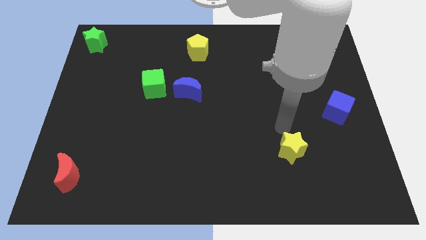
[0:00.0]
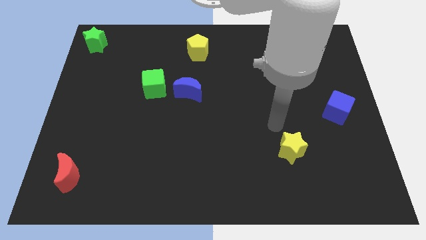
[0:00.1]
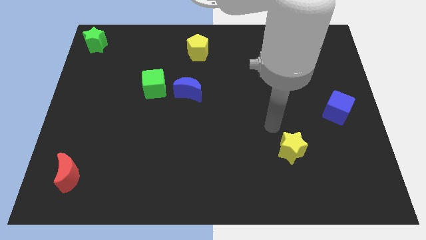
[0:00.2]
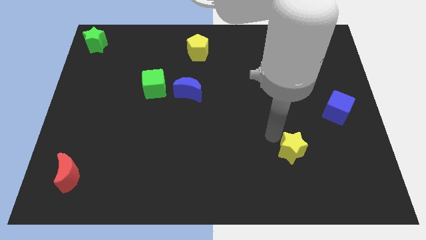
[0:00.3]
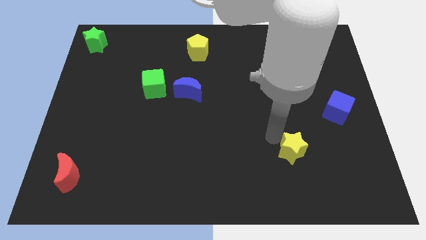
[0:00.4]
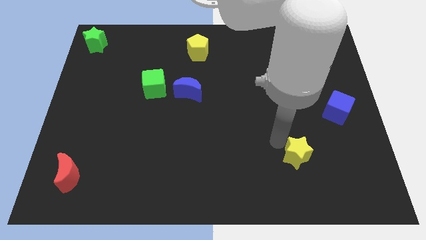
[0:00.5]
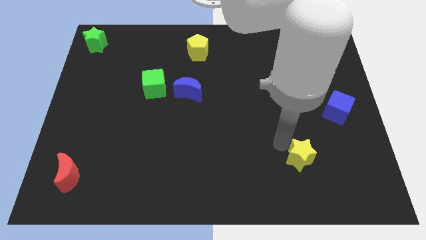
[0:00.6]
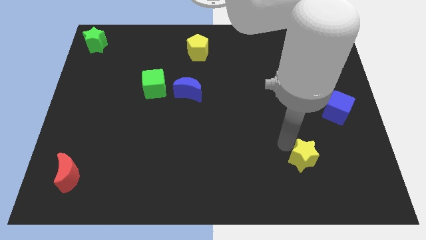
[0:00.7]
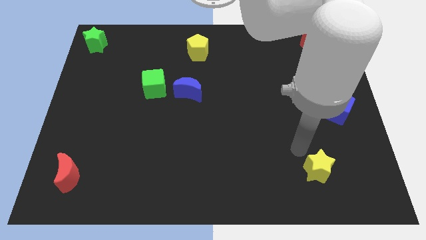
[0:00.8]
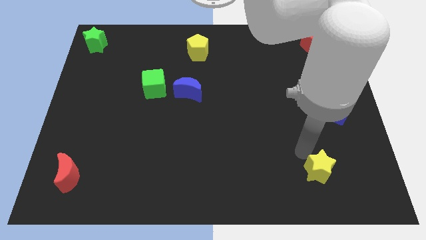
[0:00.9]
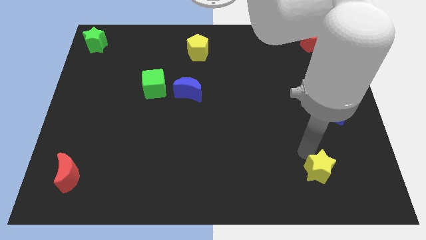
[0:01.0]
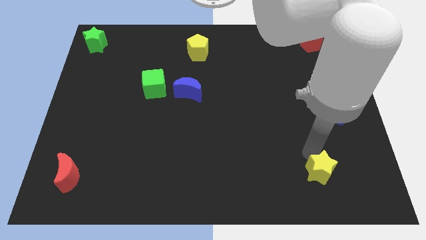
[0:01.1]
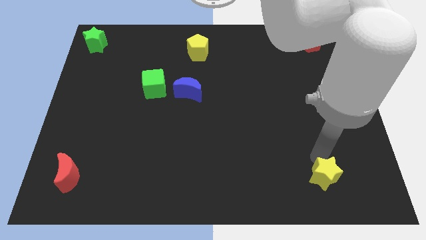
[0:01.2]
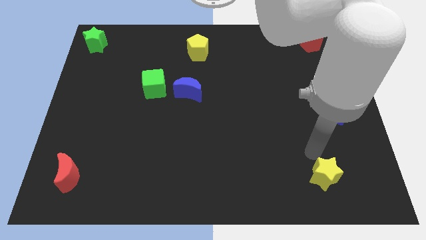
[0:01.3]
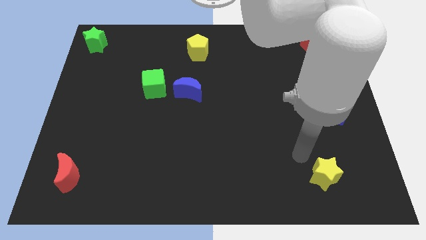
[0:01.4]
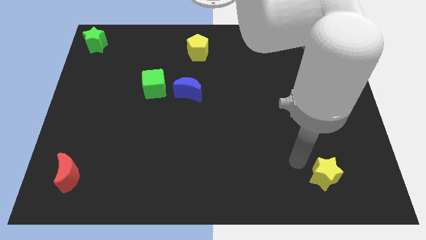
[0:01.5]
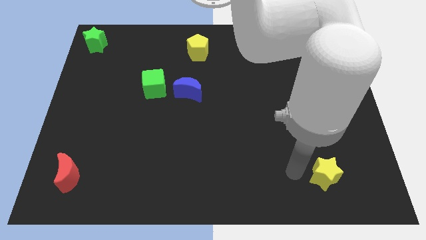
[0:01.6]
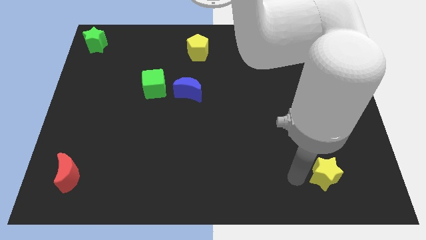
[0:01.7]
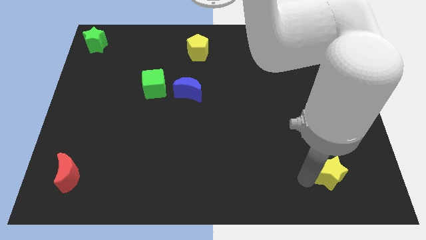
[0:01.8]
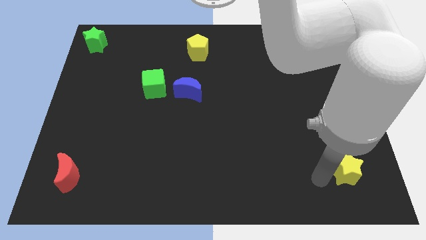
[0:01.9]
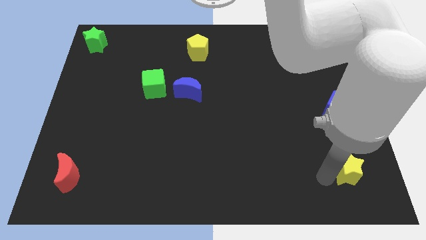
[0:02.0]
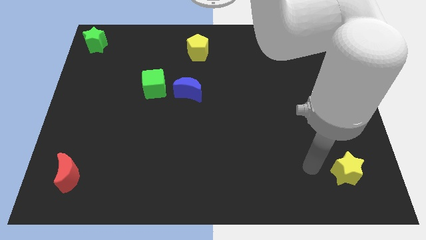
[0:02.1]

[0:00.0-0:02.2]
move the yellow star to the bottom right on the board

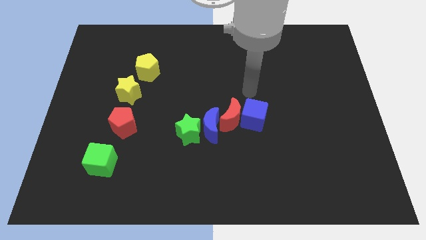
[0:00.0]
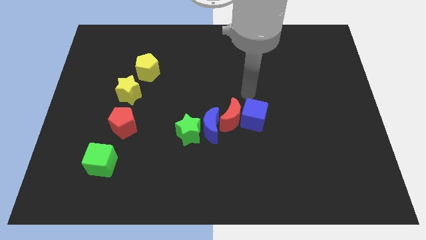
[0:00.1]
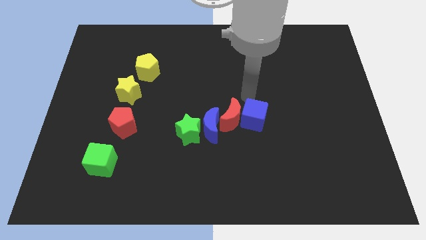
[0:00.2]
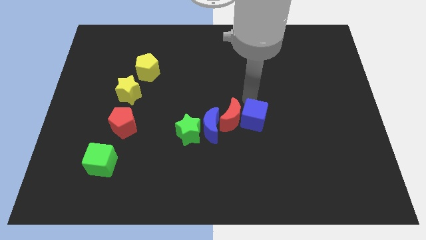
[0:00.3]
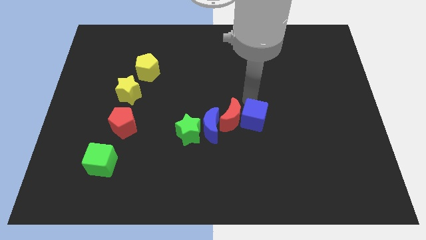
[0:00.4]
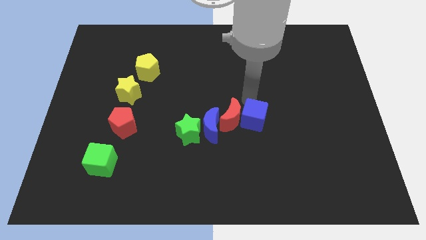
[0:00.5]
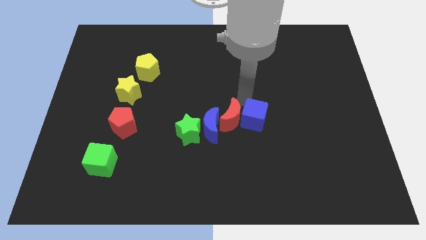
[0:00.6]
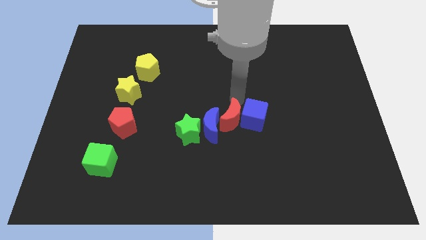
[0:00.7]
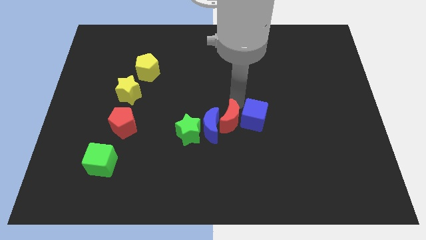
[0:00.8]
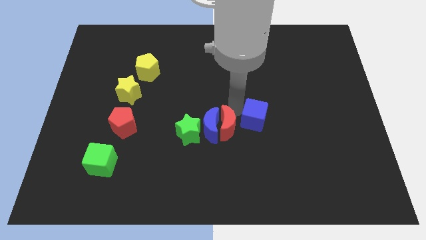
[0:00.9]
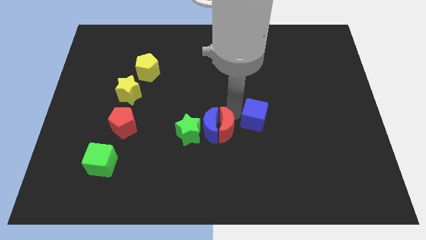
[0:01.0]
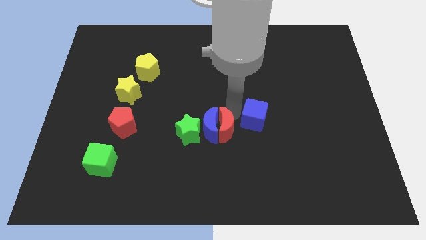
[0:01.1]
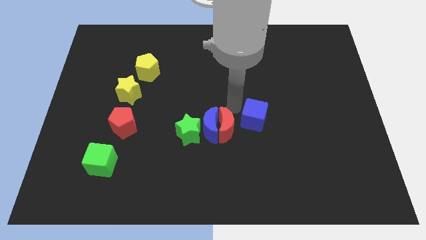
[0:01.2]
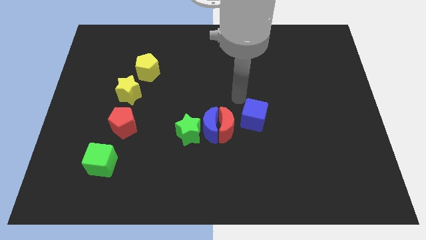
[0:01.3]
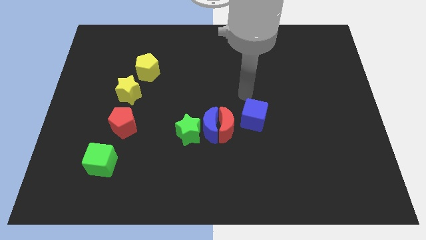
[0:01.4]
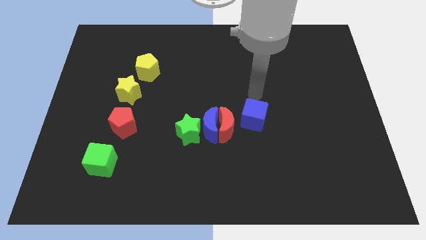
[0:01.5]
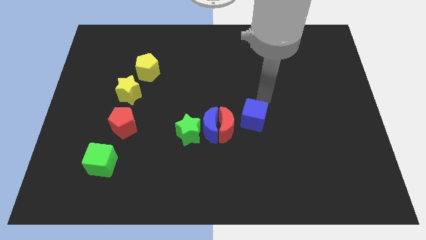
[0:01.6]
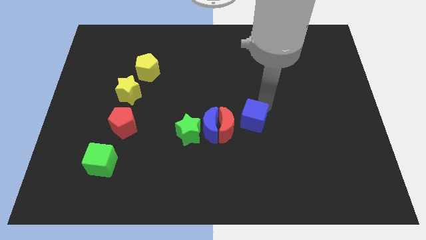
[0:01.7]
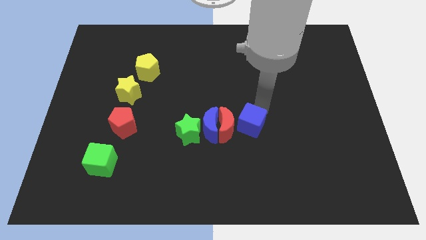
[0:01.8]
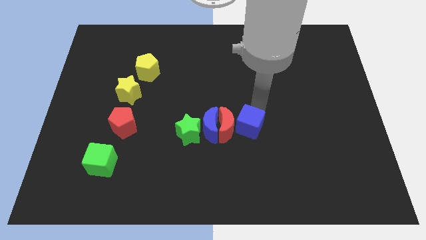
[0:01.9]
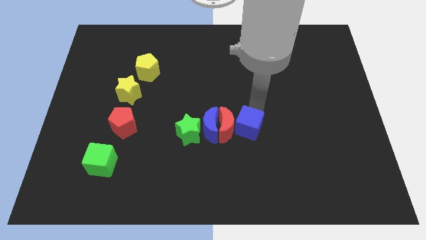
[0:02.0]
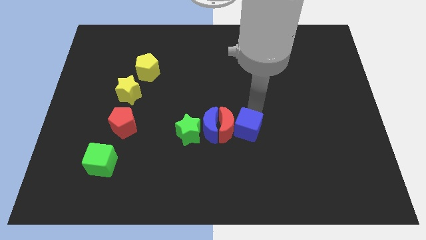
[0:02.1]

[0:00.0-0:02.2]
slightly push blue cube and red moon to the right of the blue crescent

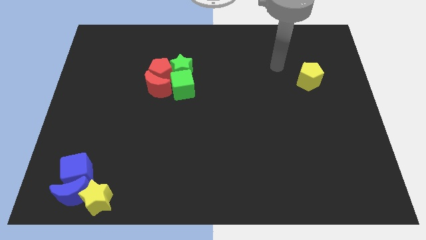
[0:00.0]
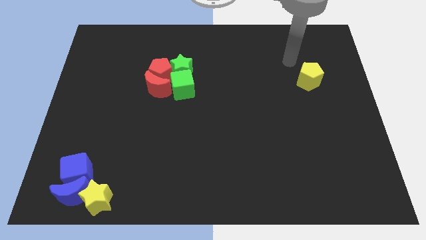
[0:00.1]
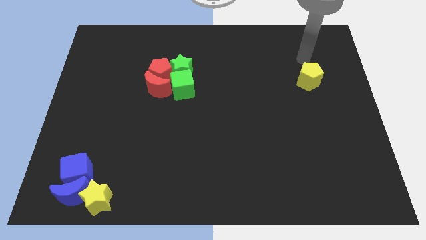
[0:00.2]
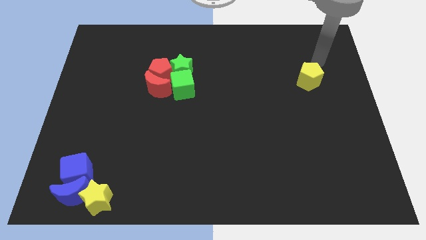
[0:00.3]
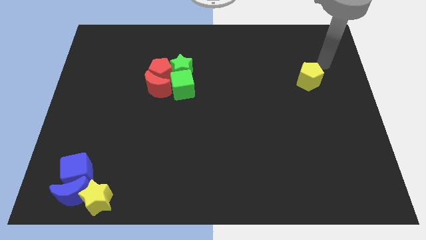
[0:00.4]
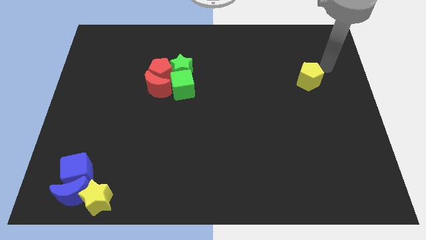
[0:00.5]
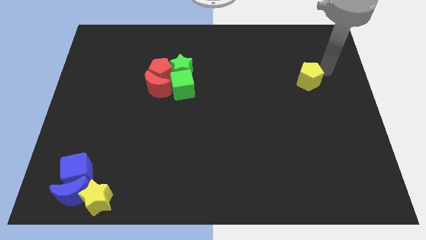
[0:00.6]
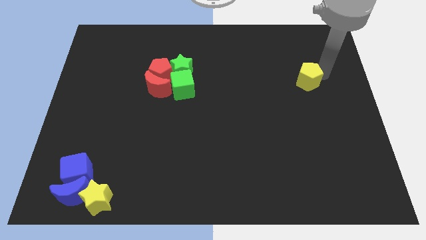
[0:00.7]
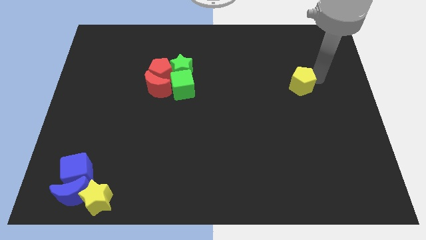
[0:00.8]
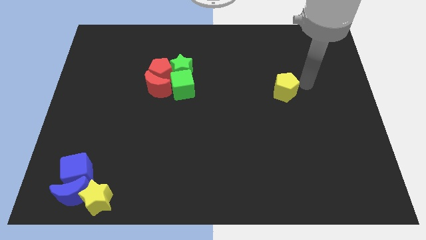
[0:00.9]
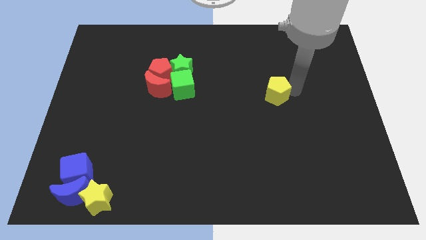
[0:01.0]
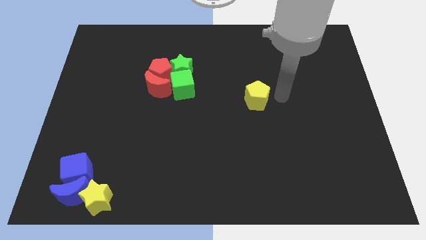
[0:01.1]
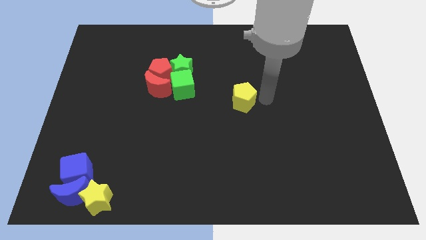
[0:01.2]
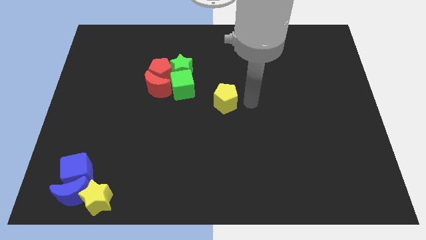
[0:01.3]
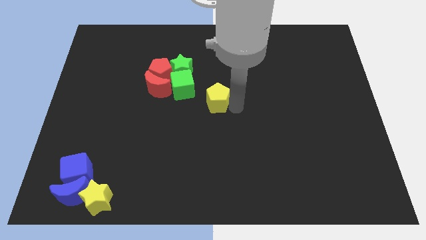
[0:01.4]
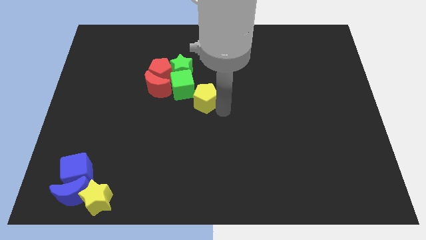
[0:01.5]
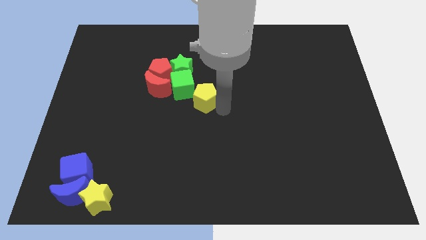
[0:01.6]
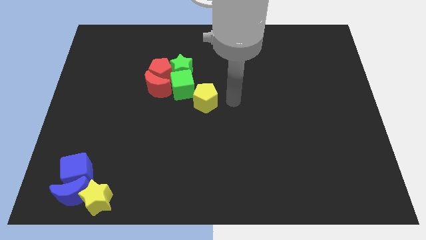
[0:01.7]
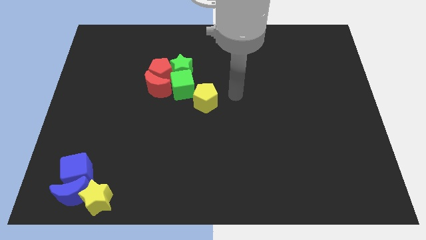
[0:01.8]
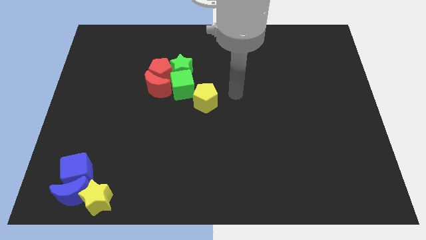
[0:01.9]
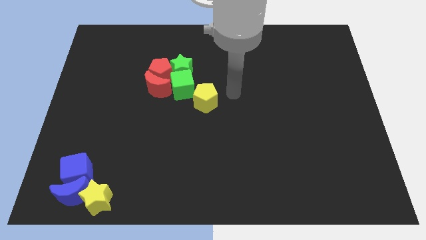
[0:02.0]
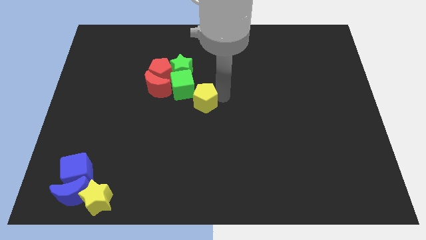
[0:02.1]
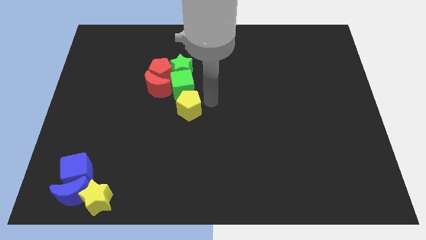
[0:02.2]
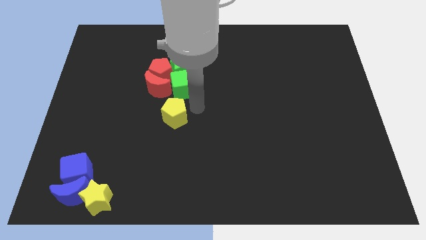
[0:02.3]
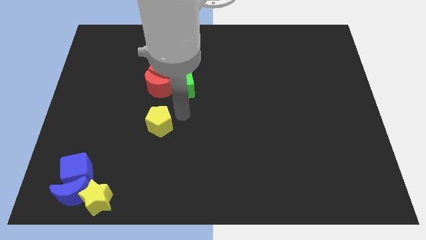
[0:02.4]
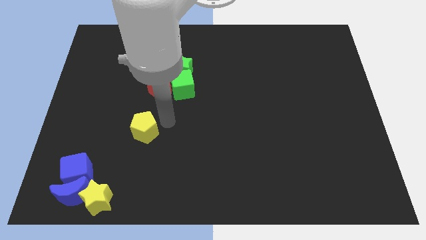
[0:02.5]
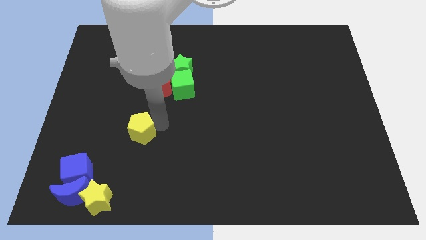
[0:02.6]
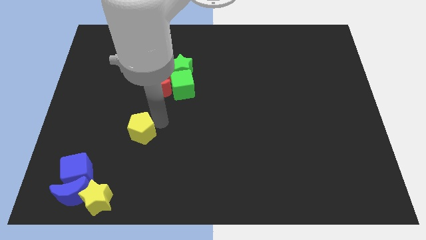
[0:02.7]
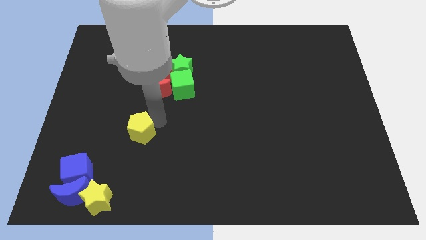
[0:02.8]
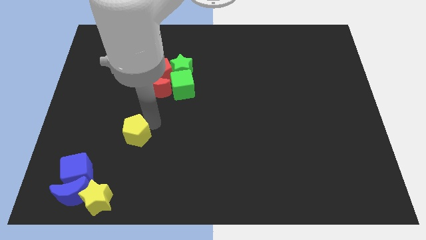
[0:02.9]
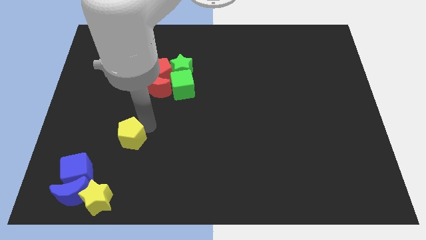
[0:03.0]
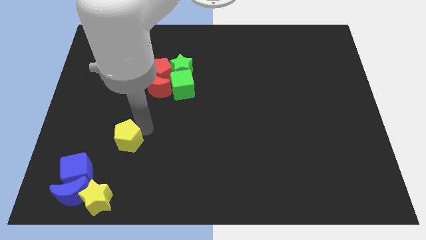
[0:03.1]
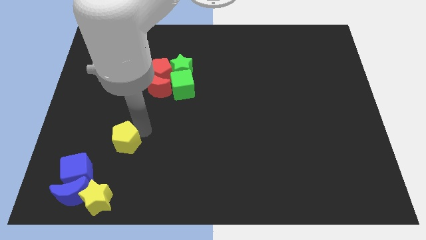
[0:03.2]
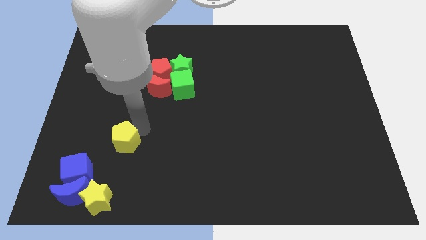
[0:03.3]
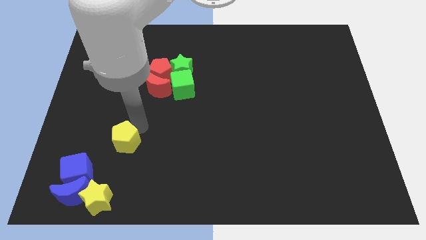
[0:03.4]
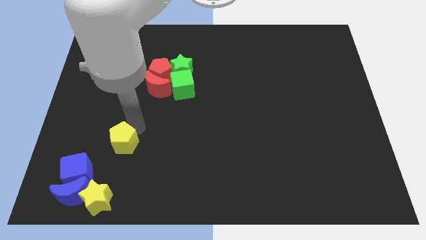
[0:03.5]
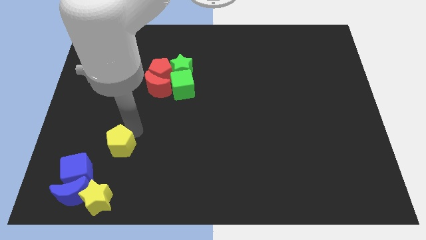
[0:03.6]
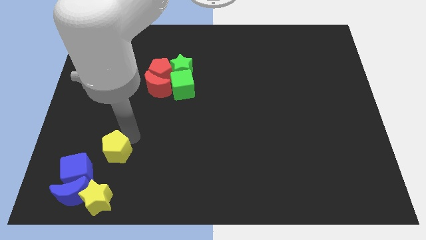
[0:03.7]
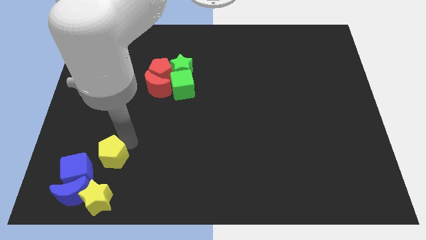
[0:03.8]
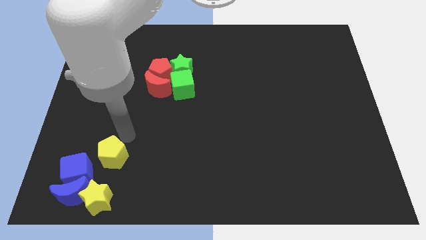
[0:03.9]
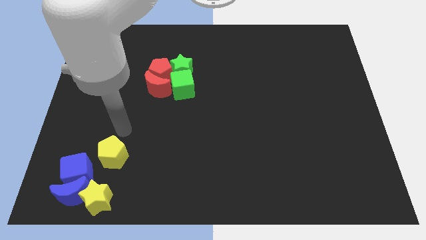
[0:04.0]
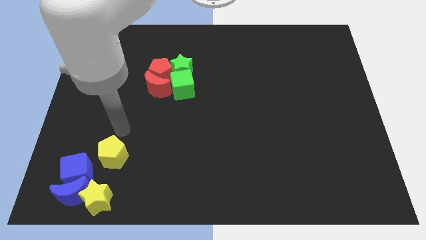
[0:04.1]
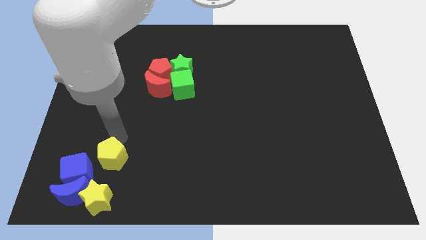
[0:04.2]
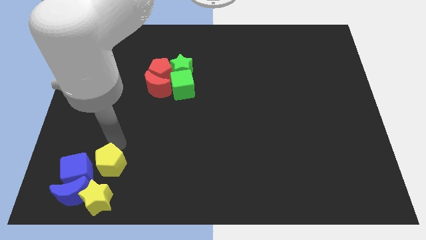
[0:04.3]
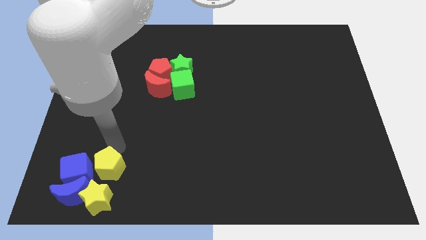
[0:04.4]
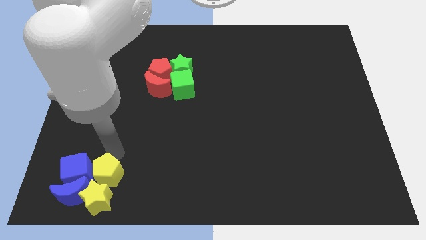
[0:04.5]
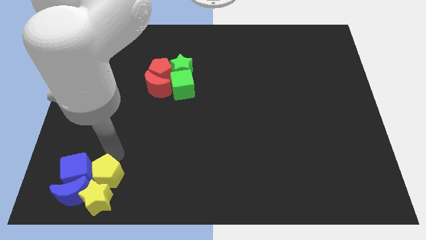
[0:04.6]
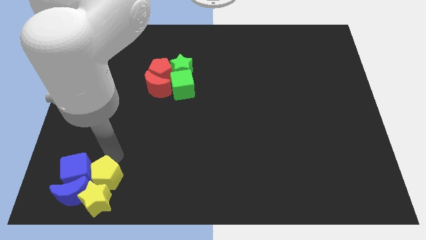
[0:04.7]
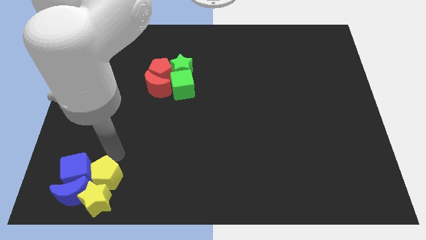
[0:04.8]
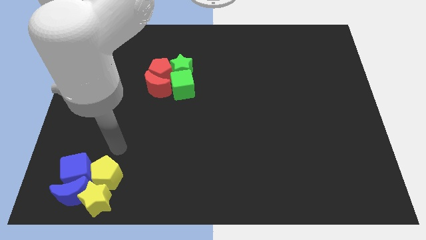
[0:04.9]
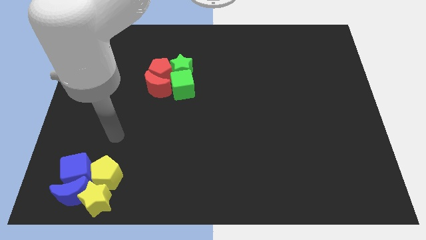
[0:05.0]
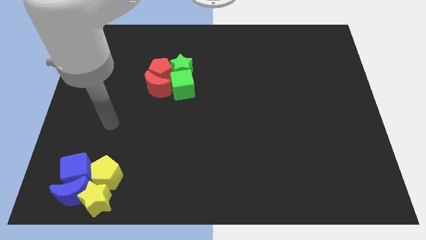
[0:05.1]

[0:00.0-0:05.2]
move the yellow pentagon into yellow star
